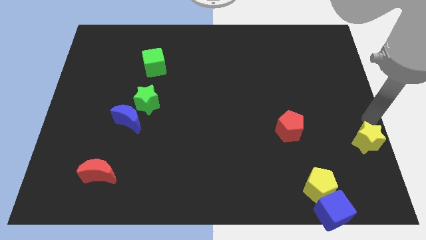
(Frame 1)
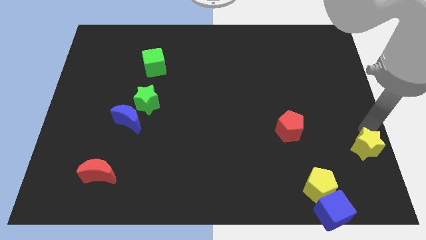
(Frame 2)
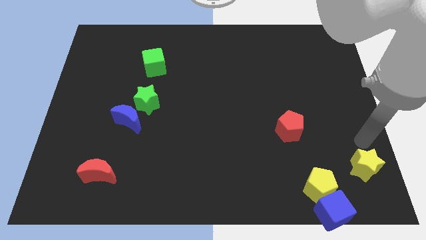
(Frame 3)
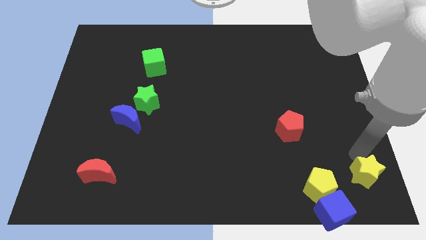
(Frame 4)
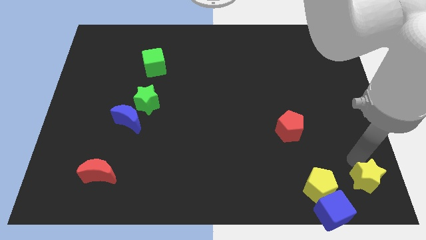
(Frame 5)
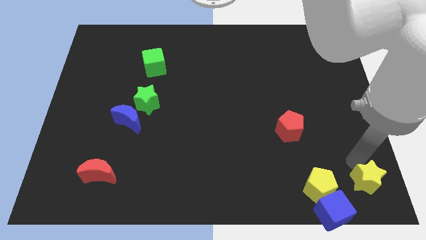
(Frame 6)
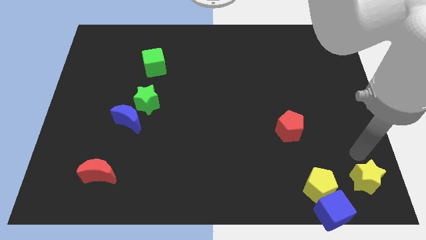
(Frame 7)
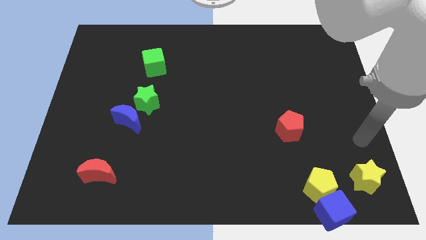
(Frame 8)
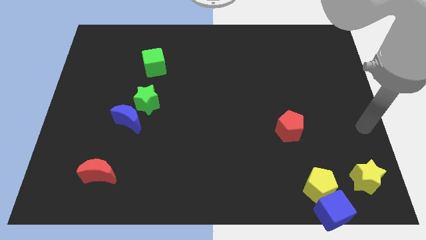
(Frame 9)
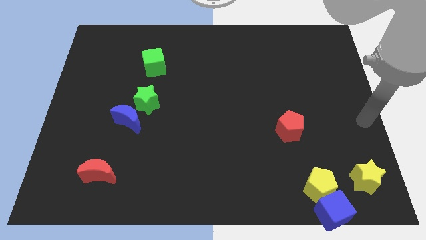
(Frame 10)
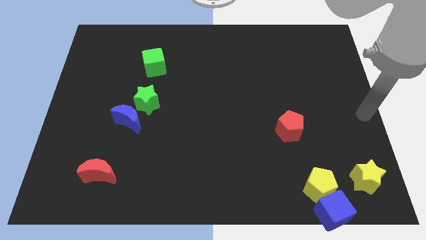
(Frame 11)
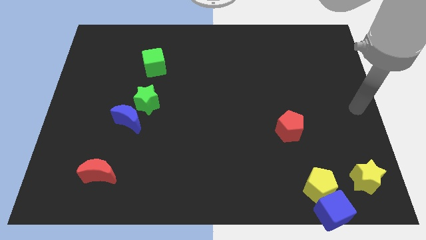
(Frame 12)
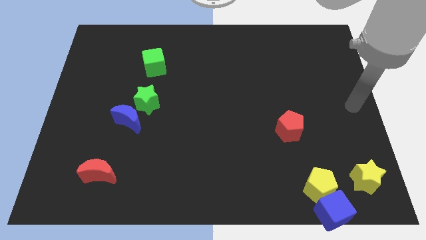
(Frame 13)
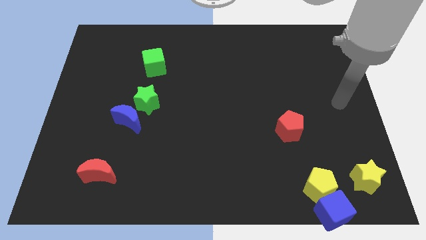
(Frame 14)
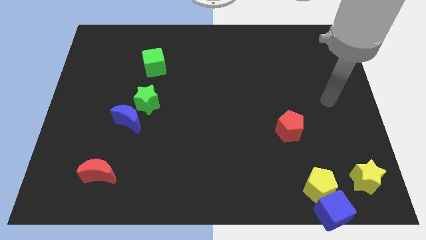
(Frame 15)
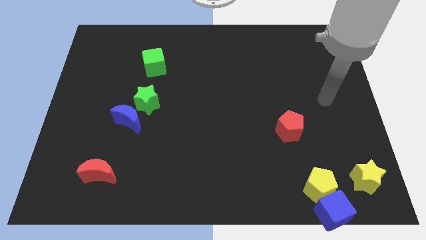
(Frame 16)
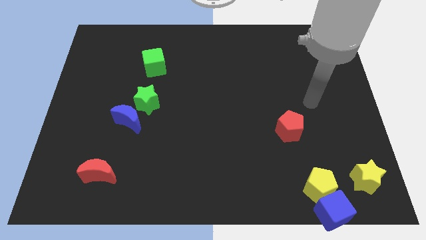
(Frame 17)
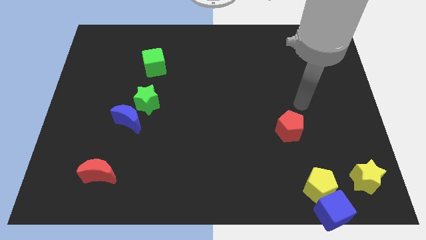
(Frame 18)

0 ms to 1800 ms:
place the yellow star to the right side of the yellow pentagon

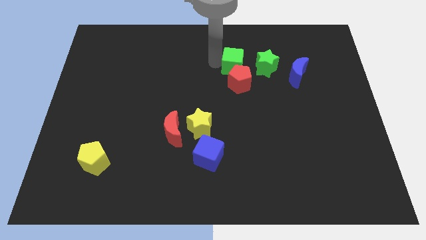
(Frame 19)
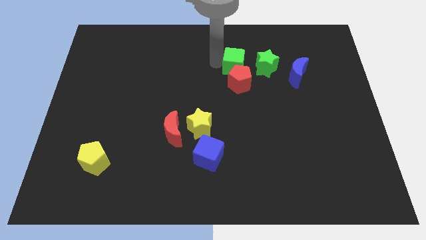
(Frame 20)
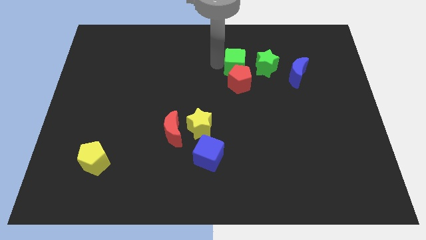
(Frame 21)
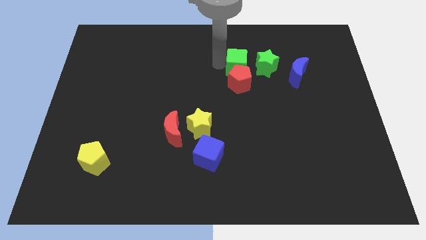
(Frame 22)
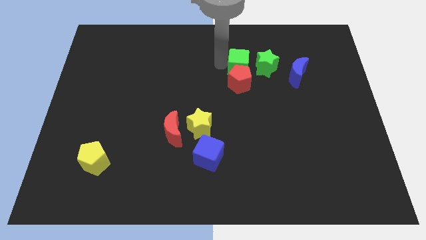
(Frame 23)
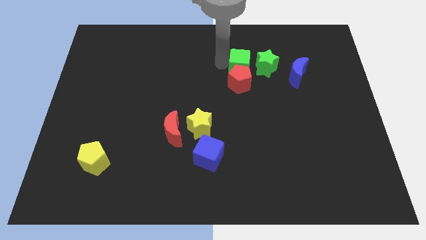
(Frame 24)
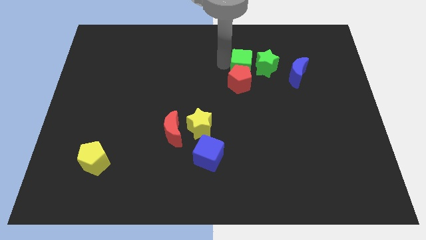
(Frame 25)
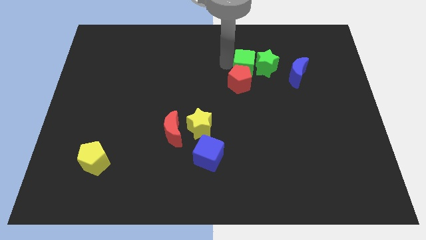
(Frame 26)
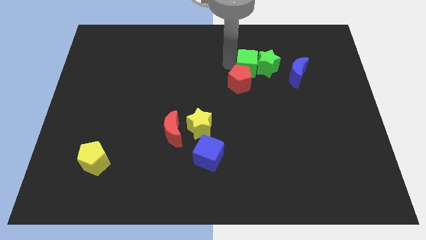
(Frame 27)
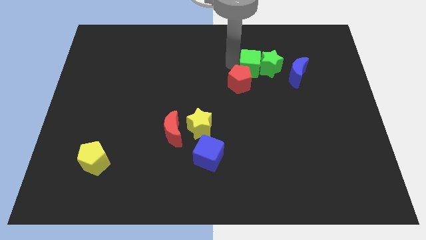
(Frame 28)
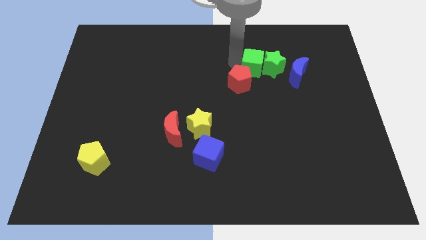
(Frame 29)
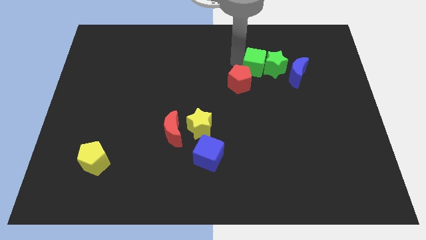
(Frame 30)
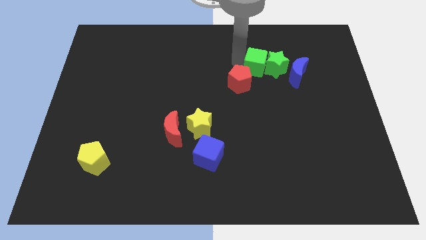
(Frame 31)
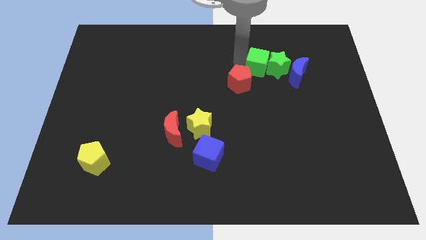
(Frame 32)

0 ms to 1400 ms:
move the green cube into the green star

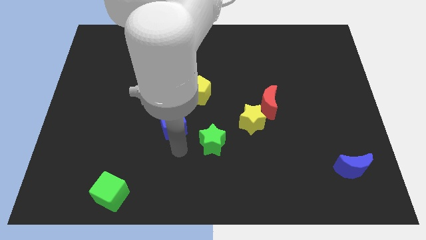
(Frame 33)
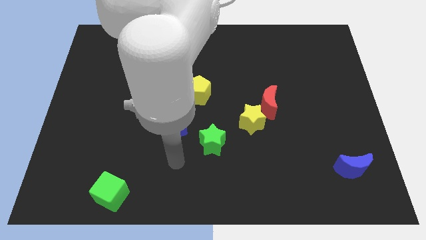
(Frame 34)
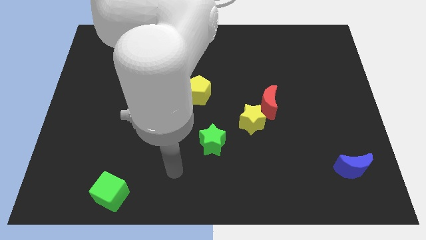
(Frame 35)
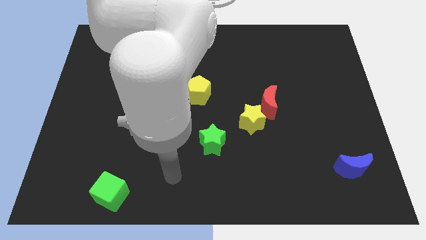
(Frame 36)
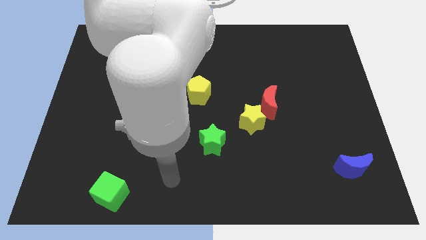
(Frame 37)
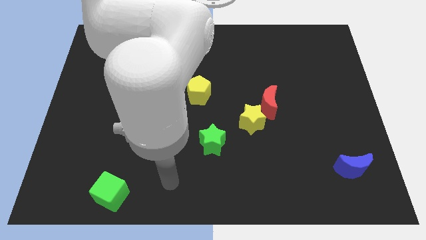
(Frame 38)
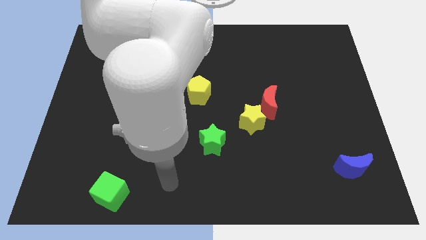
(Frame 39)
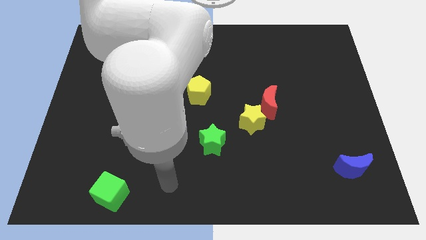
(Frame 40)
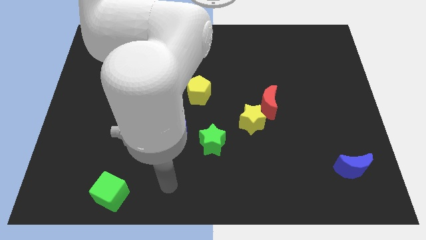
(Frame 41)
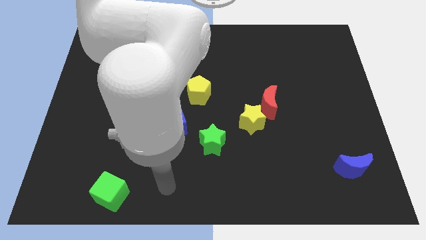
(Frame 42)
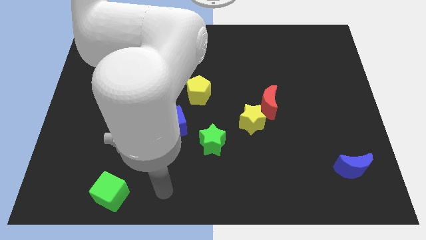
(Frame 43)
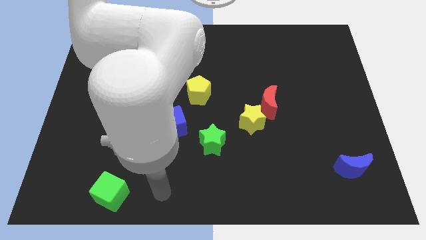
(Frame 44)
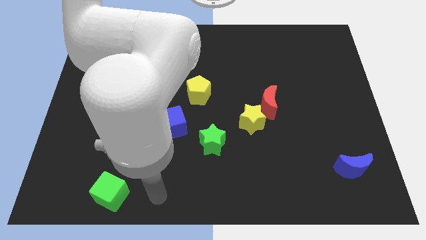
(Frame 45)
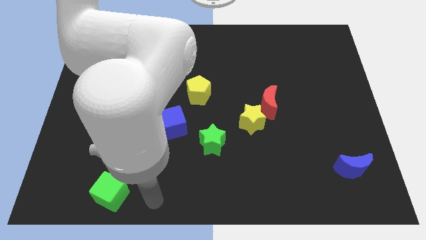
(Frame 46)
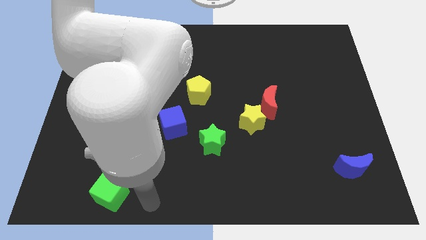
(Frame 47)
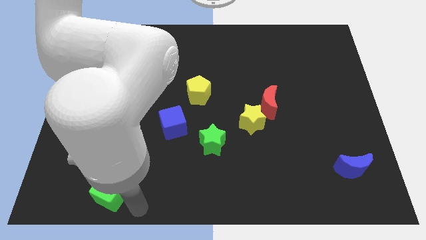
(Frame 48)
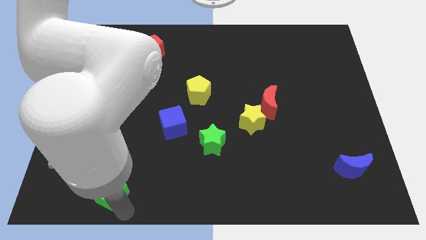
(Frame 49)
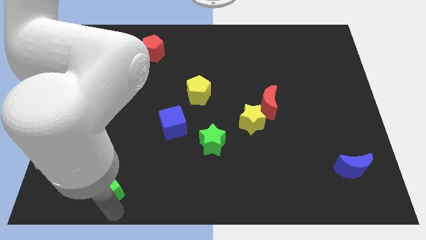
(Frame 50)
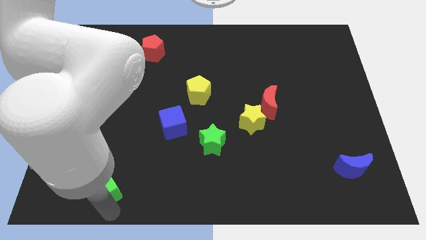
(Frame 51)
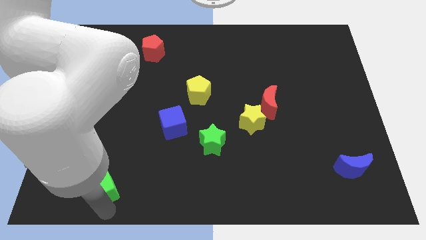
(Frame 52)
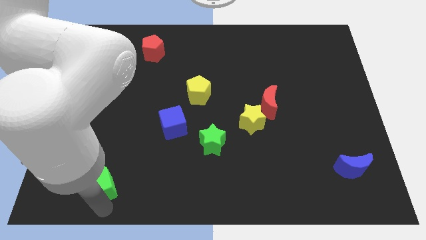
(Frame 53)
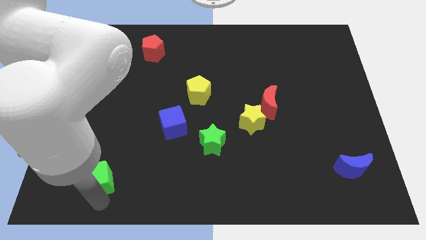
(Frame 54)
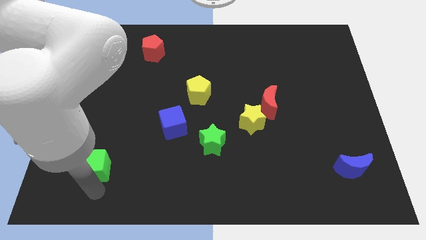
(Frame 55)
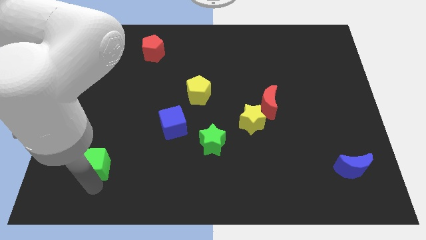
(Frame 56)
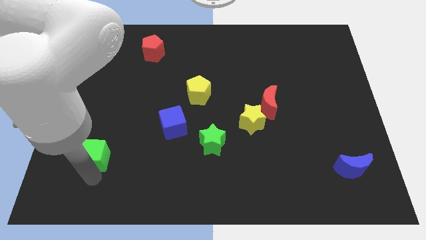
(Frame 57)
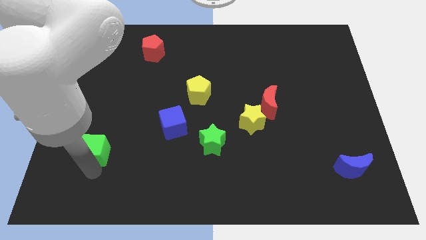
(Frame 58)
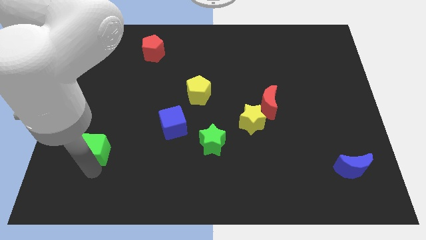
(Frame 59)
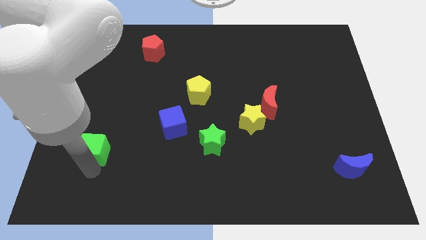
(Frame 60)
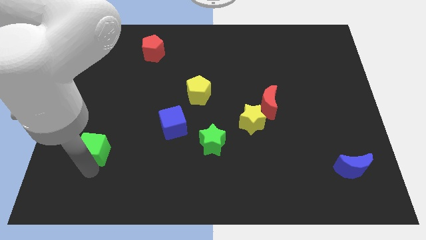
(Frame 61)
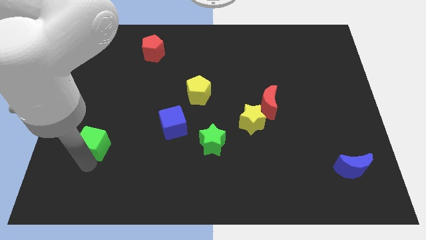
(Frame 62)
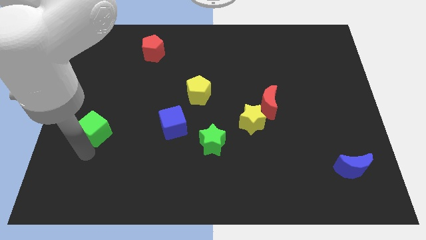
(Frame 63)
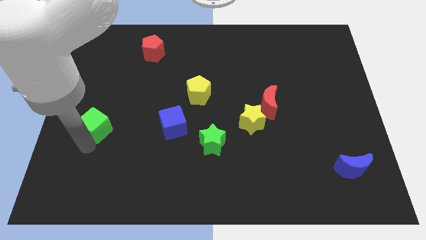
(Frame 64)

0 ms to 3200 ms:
place the green cube left to the blue cube

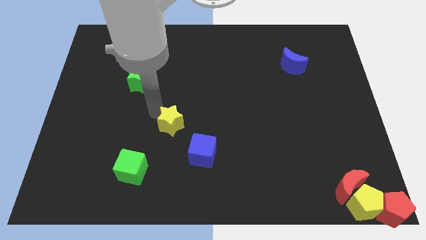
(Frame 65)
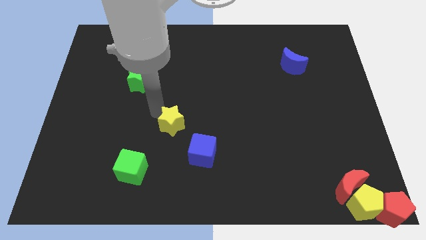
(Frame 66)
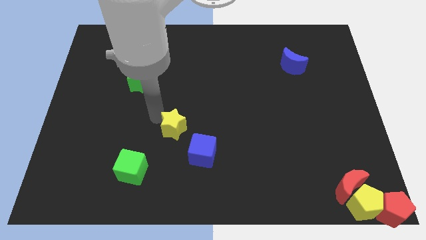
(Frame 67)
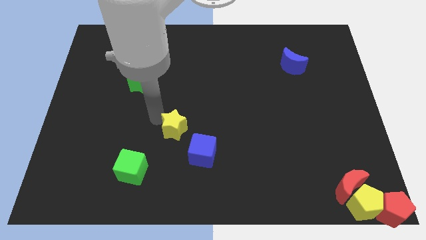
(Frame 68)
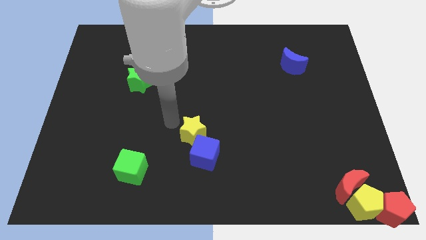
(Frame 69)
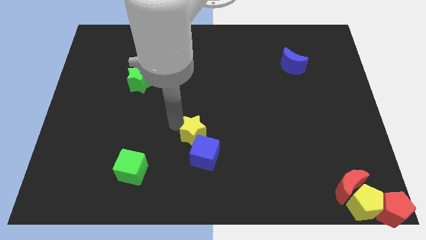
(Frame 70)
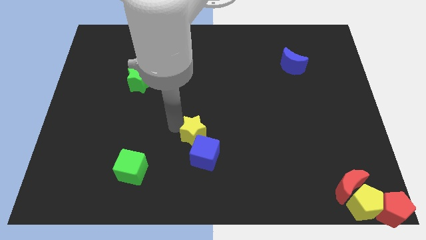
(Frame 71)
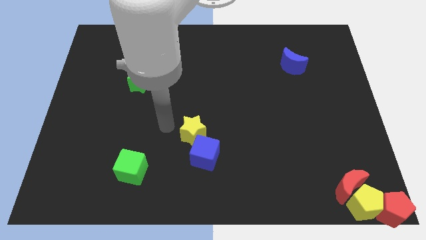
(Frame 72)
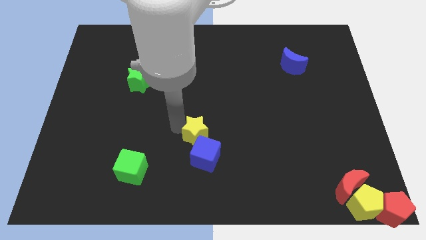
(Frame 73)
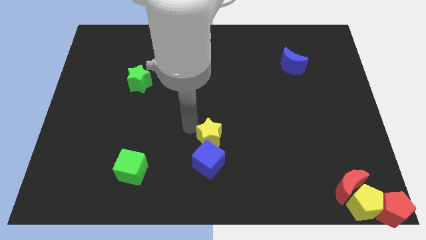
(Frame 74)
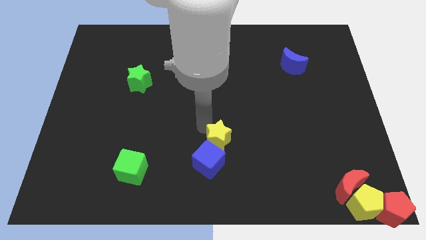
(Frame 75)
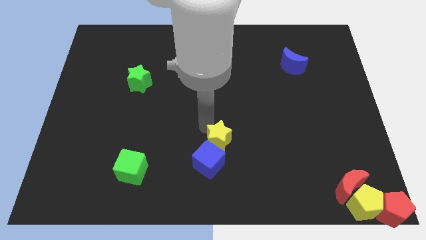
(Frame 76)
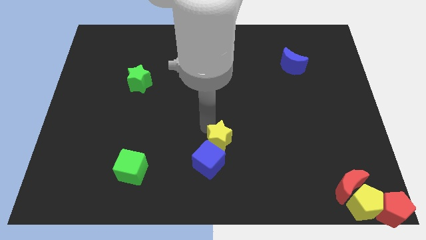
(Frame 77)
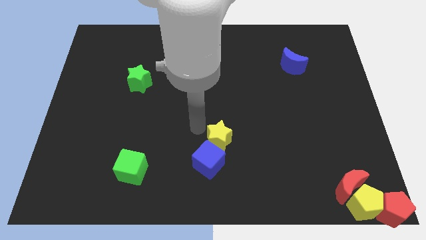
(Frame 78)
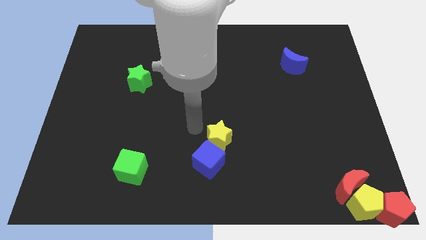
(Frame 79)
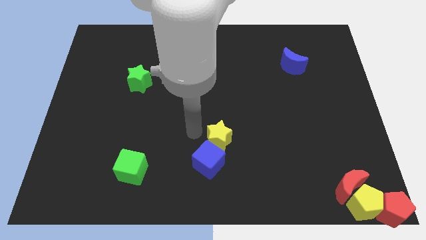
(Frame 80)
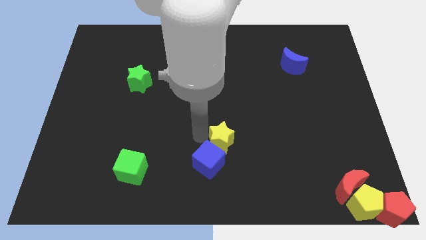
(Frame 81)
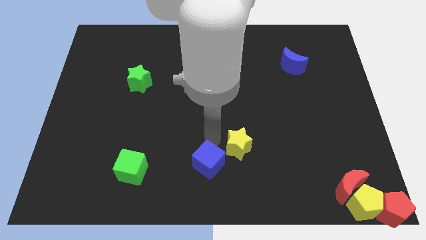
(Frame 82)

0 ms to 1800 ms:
push yellow star into the blue cube

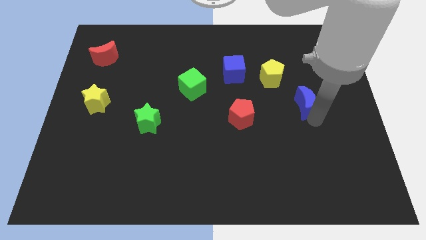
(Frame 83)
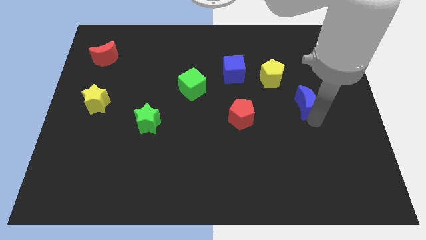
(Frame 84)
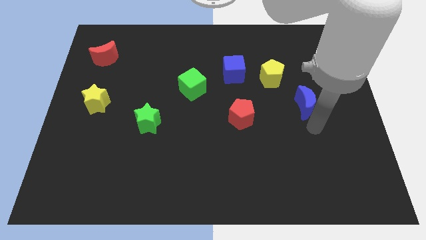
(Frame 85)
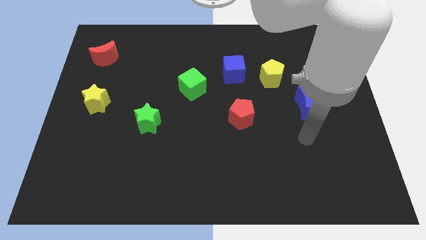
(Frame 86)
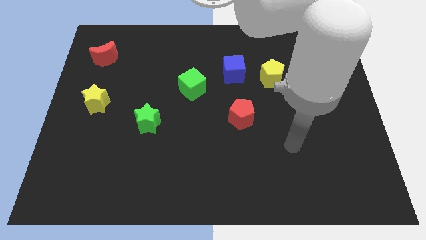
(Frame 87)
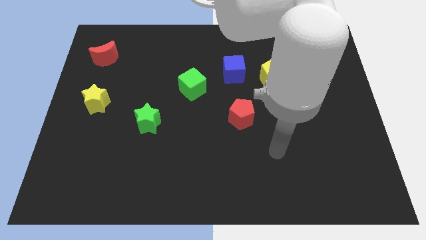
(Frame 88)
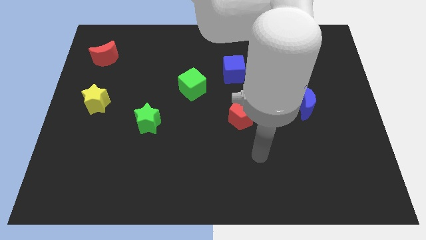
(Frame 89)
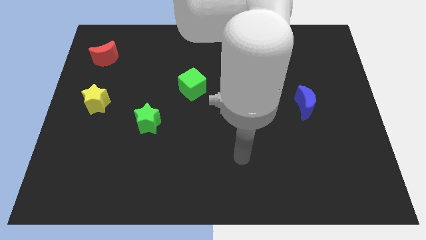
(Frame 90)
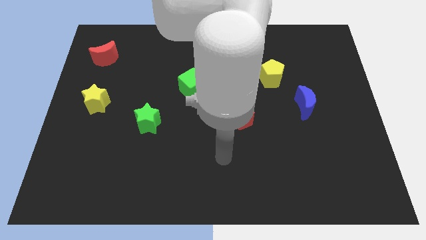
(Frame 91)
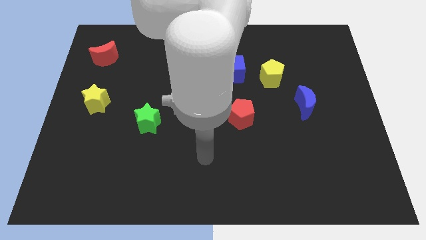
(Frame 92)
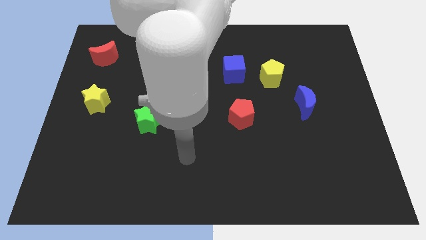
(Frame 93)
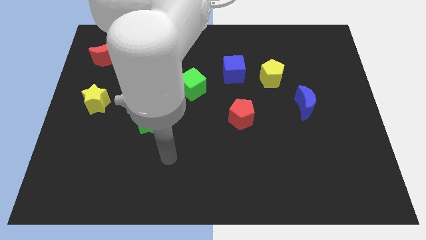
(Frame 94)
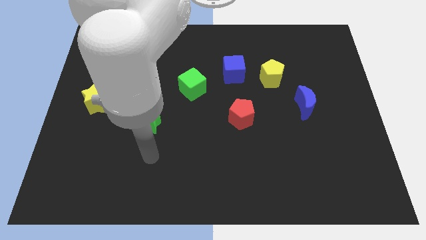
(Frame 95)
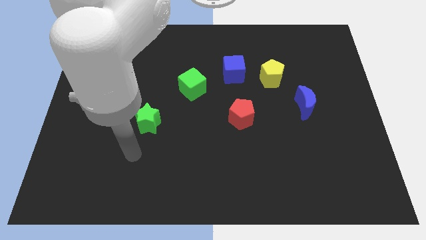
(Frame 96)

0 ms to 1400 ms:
move your arm towards the left side of the board
